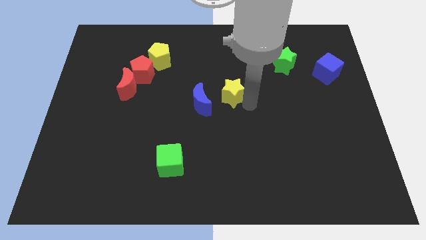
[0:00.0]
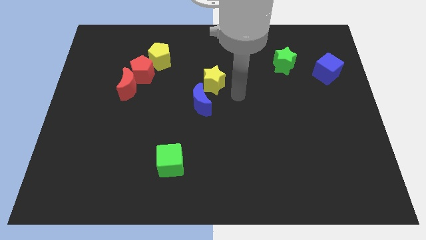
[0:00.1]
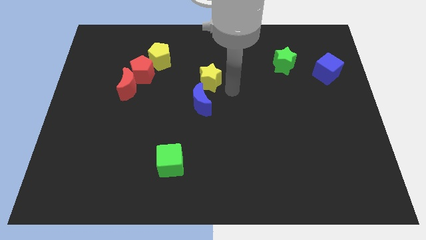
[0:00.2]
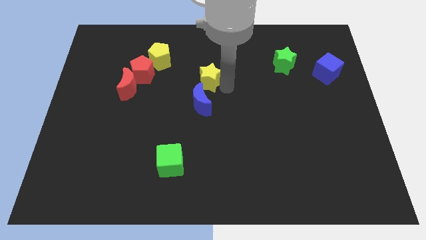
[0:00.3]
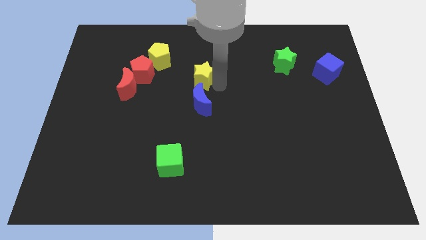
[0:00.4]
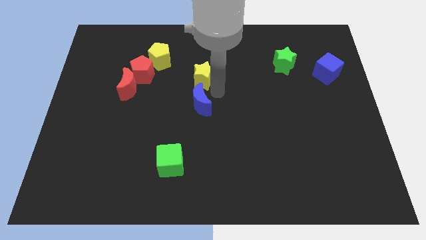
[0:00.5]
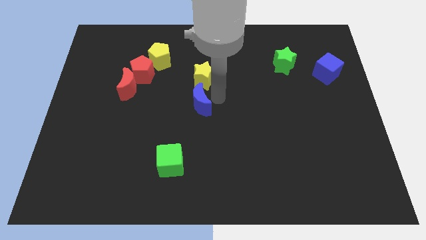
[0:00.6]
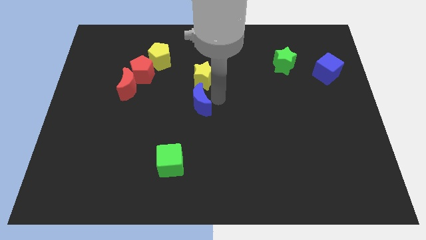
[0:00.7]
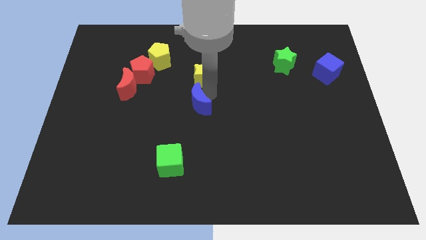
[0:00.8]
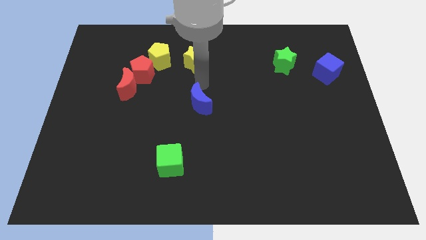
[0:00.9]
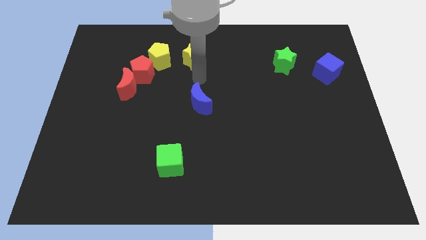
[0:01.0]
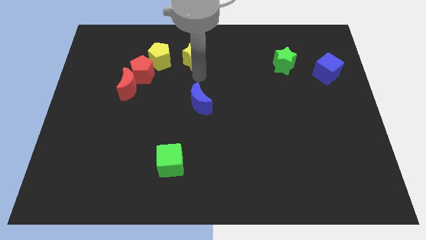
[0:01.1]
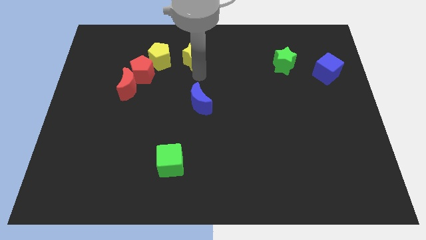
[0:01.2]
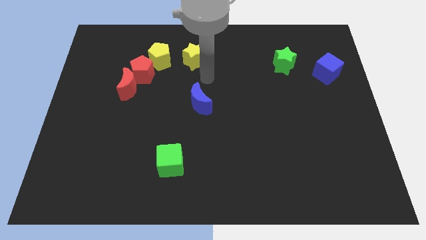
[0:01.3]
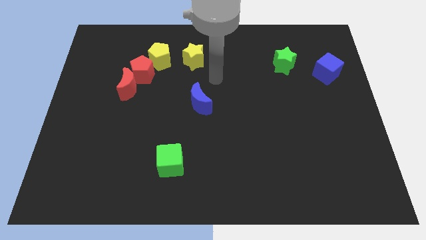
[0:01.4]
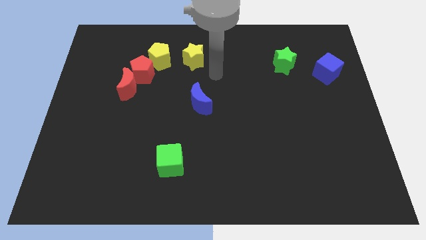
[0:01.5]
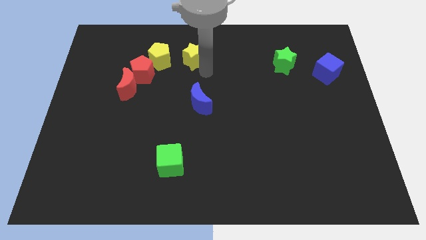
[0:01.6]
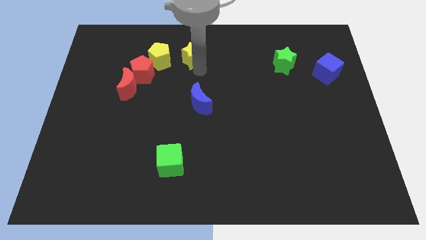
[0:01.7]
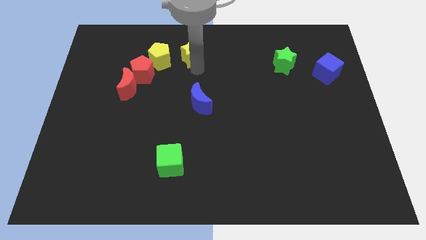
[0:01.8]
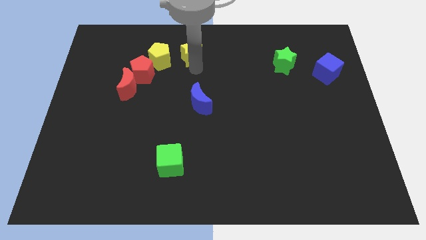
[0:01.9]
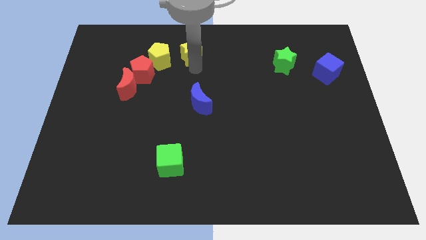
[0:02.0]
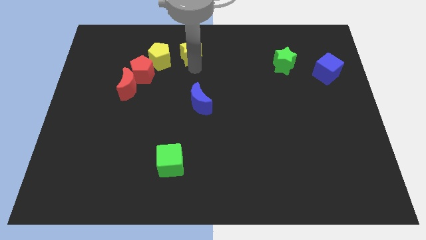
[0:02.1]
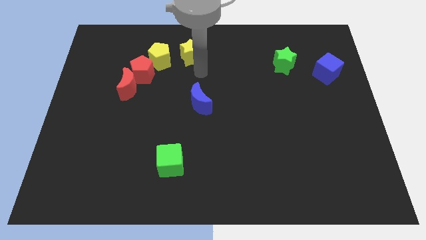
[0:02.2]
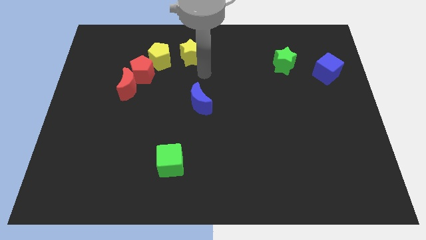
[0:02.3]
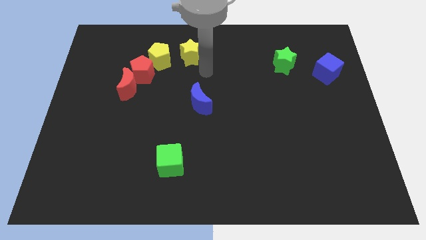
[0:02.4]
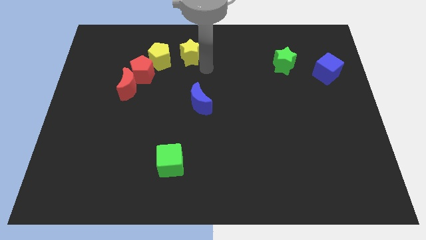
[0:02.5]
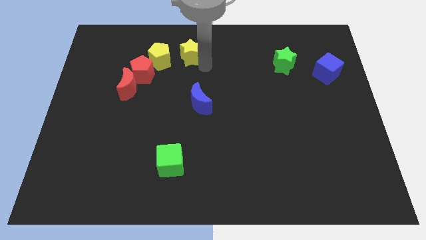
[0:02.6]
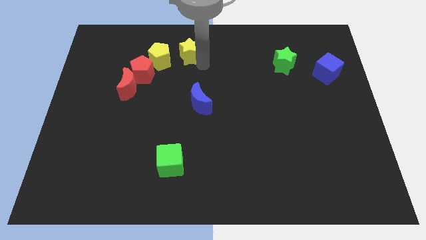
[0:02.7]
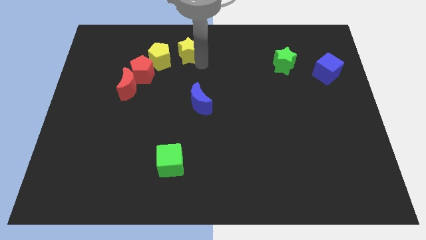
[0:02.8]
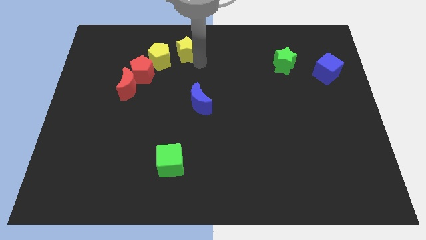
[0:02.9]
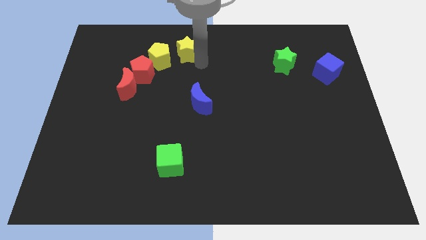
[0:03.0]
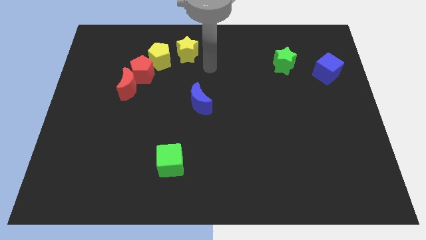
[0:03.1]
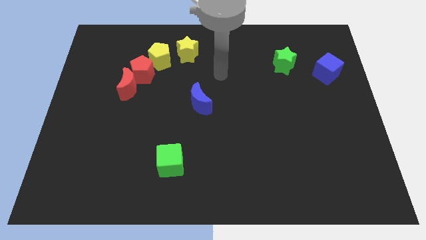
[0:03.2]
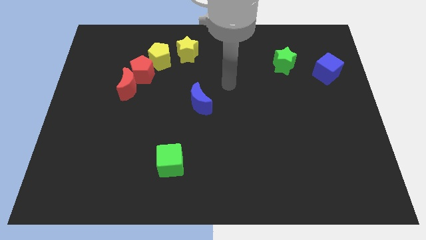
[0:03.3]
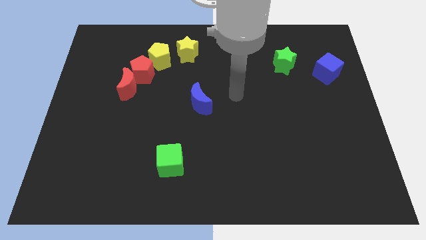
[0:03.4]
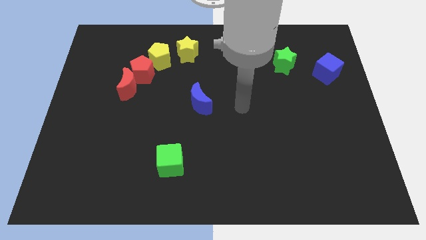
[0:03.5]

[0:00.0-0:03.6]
place the yellow star to the right of the yellow pentagon

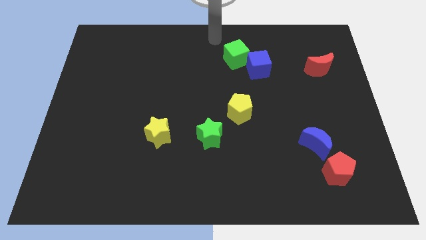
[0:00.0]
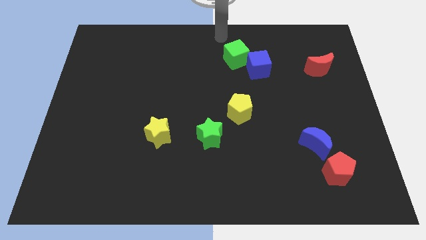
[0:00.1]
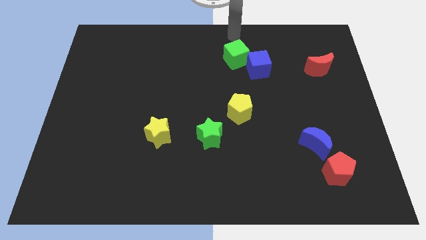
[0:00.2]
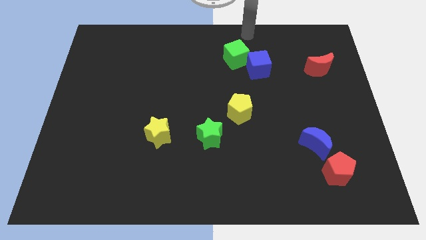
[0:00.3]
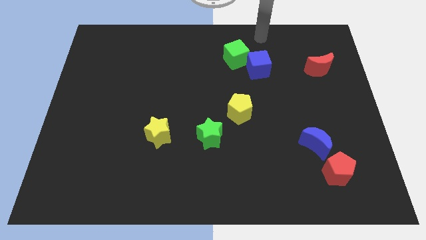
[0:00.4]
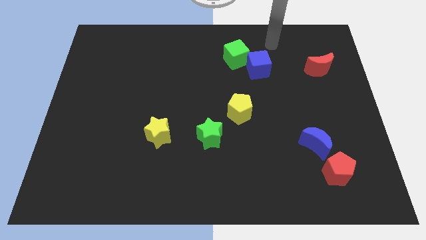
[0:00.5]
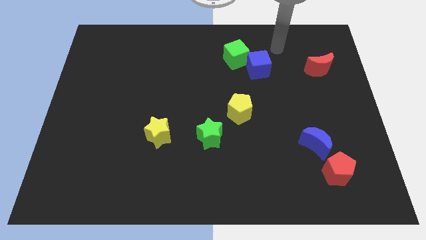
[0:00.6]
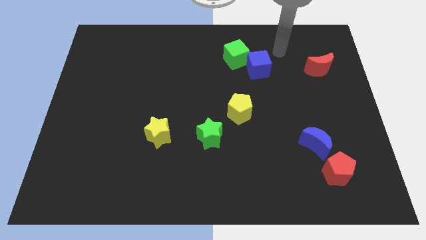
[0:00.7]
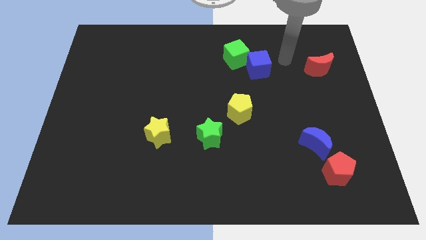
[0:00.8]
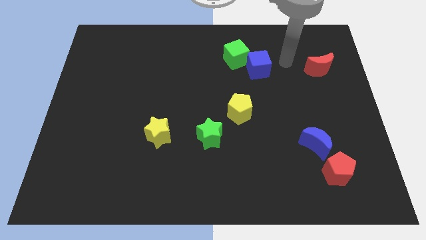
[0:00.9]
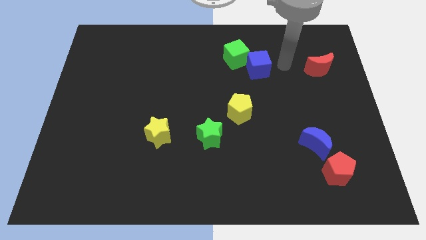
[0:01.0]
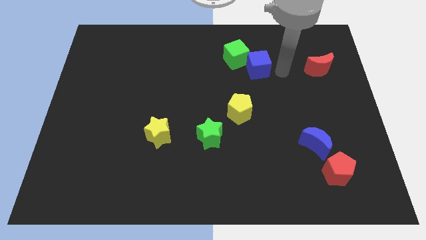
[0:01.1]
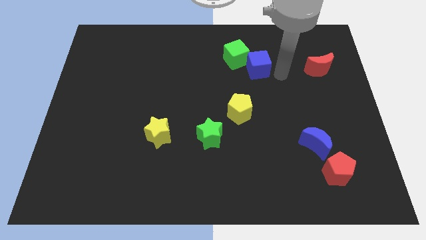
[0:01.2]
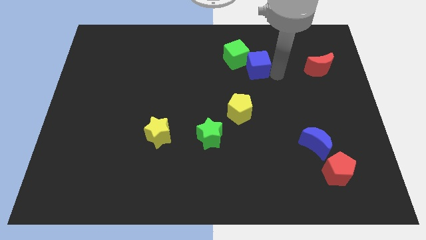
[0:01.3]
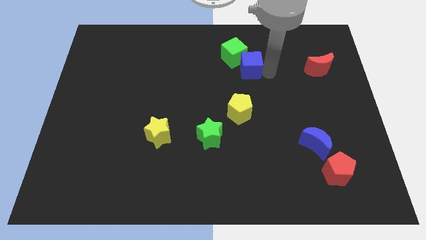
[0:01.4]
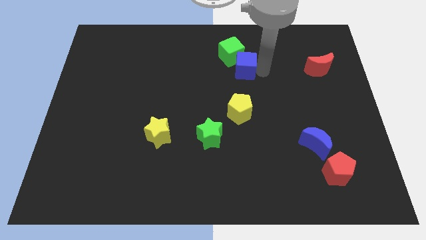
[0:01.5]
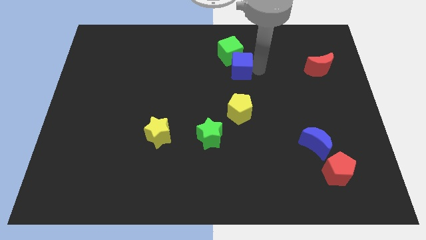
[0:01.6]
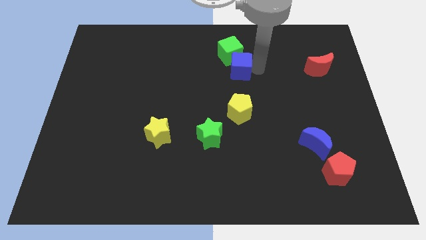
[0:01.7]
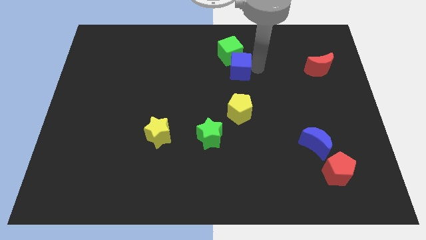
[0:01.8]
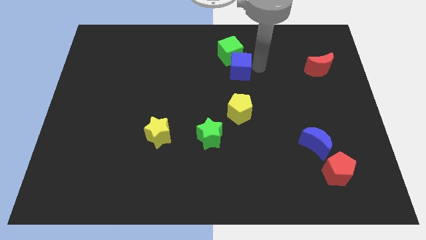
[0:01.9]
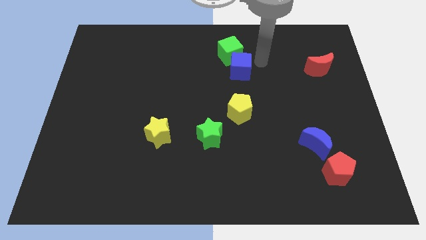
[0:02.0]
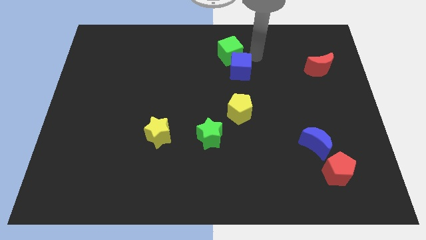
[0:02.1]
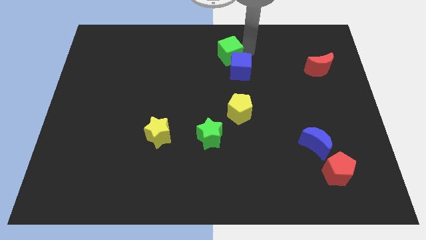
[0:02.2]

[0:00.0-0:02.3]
slightly push the blue cube into green cube

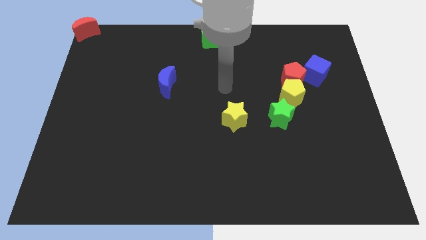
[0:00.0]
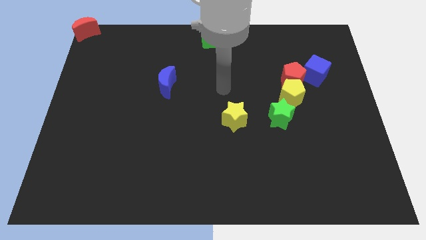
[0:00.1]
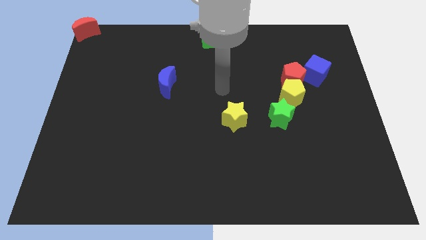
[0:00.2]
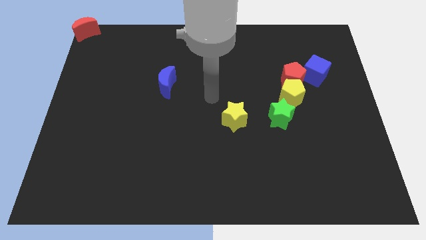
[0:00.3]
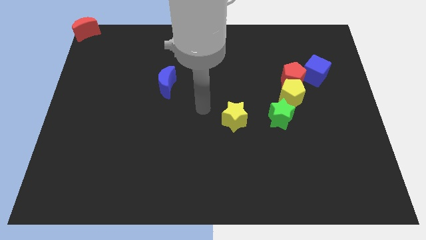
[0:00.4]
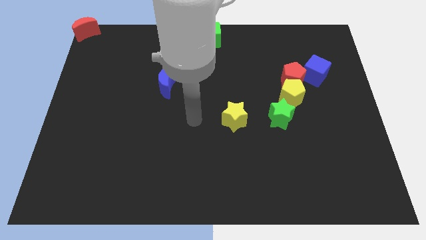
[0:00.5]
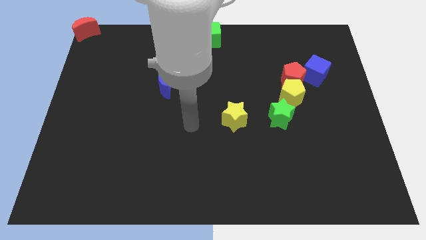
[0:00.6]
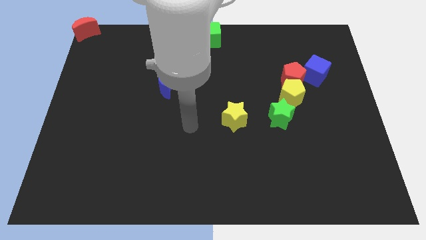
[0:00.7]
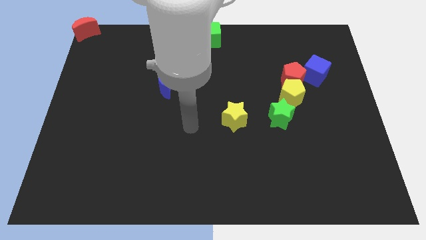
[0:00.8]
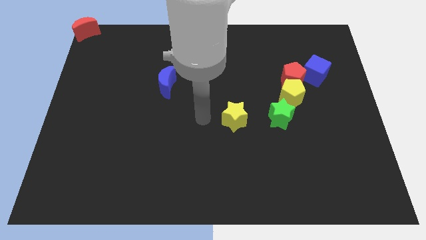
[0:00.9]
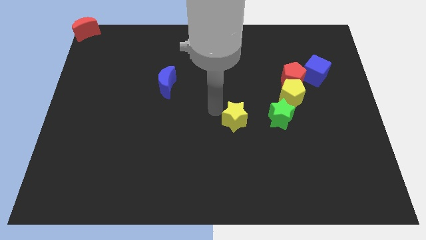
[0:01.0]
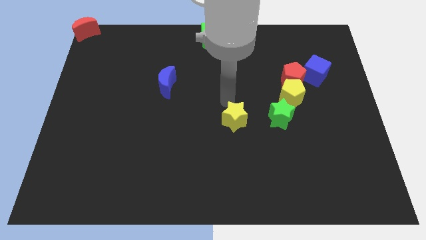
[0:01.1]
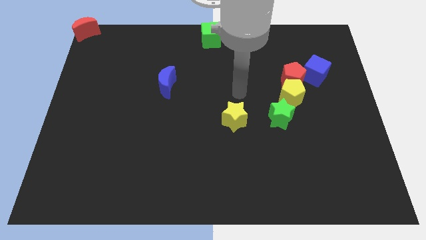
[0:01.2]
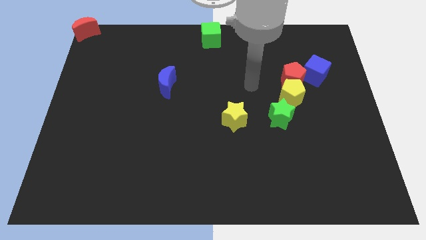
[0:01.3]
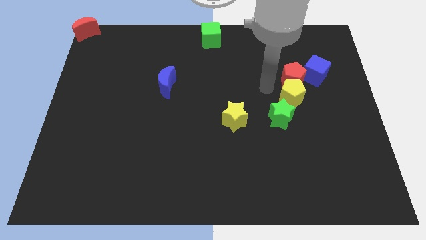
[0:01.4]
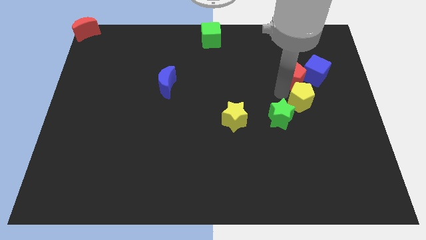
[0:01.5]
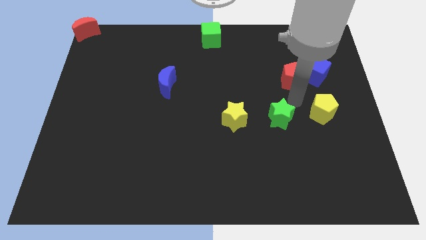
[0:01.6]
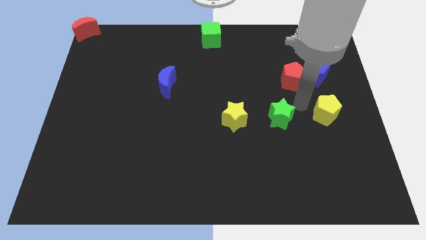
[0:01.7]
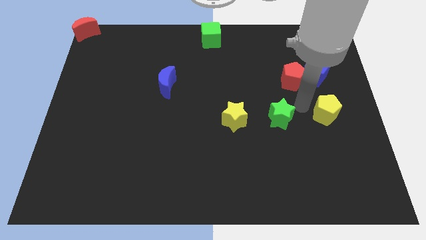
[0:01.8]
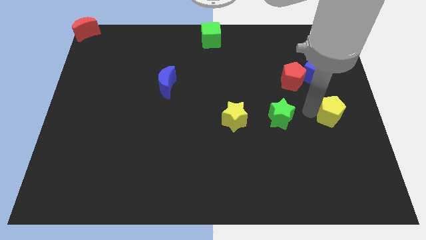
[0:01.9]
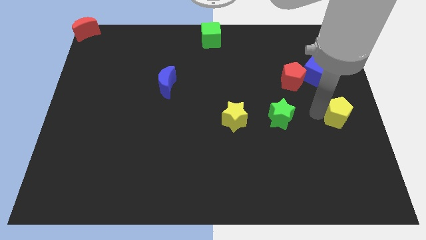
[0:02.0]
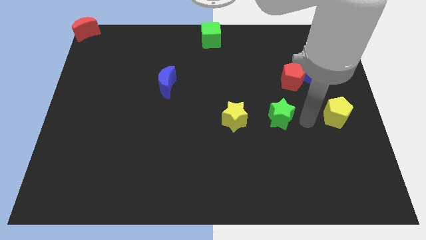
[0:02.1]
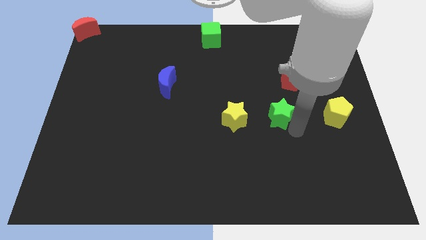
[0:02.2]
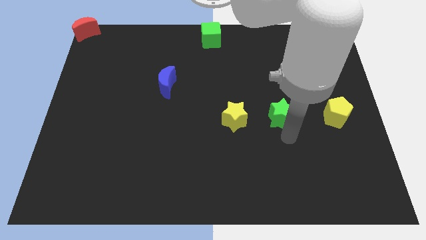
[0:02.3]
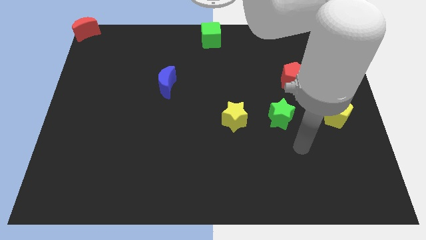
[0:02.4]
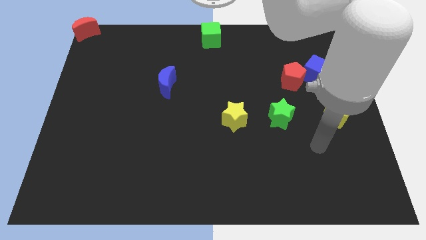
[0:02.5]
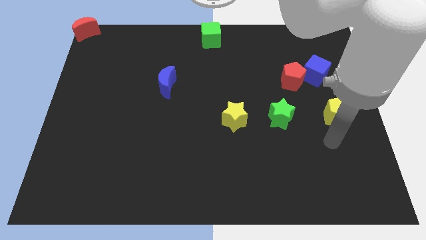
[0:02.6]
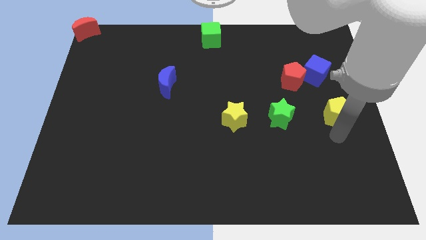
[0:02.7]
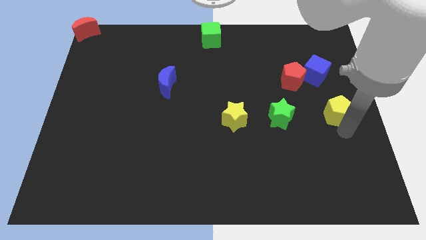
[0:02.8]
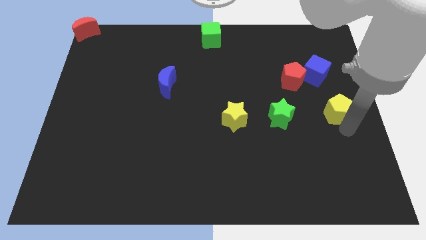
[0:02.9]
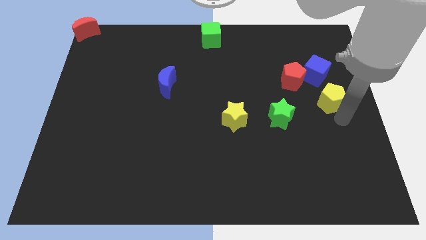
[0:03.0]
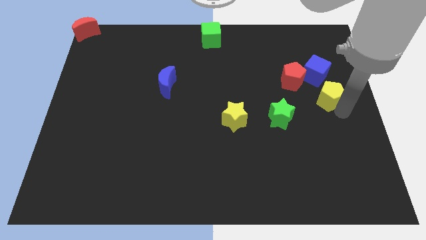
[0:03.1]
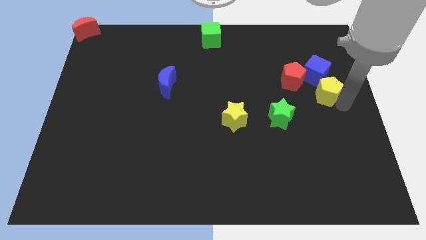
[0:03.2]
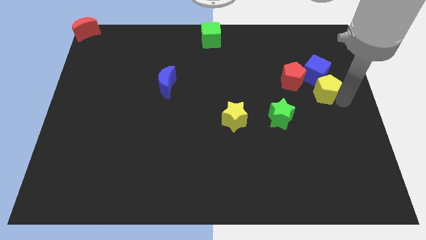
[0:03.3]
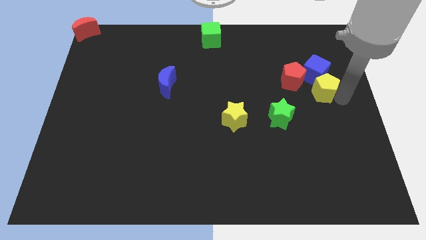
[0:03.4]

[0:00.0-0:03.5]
move the yellow pentagon below the blue cube
